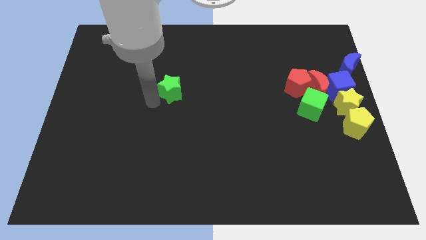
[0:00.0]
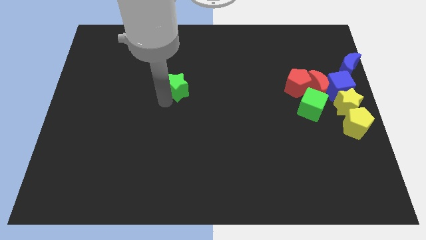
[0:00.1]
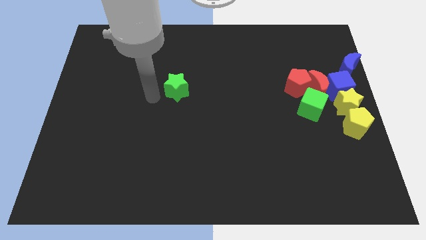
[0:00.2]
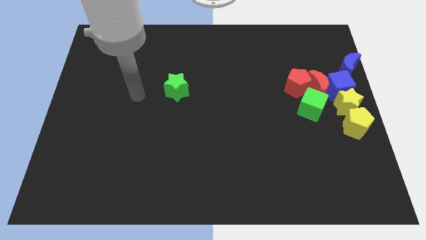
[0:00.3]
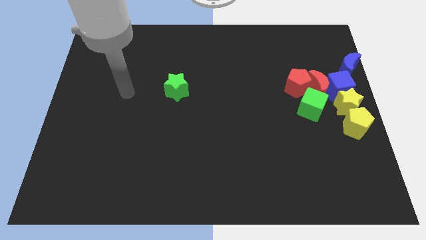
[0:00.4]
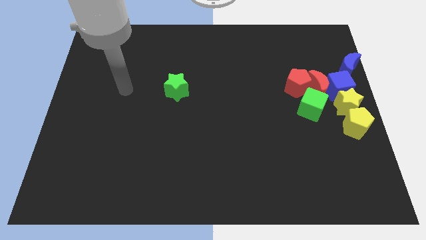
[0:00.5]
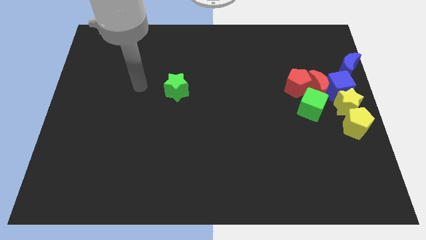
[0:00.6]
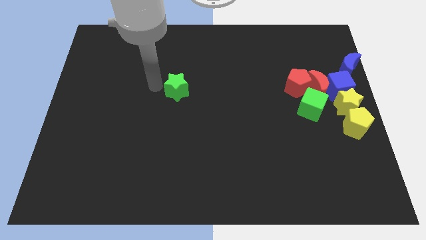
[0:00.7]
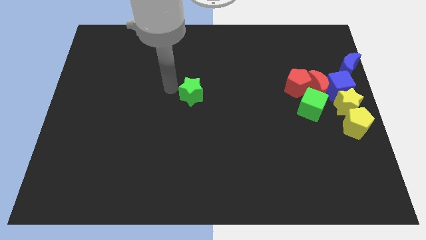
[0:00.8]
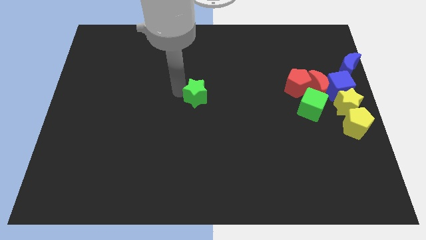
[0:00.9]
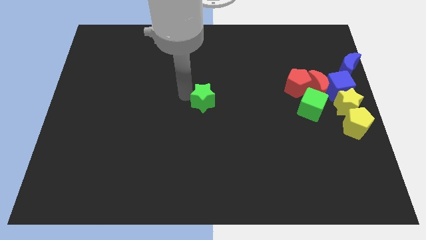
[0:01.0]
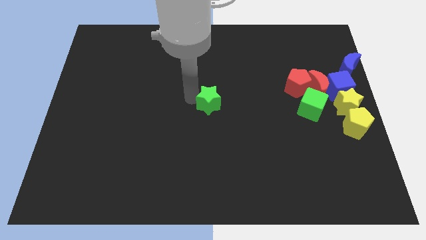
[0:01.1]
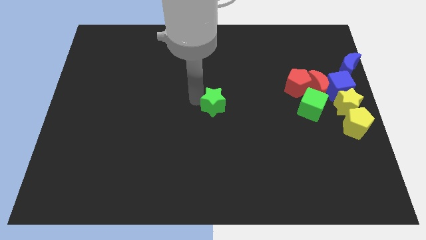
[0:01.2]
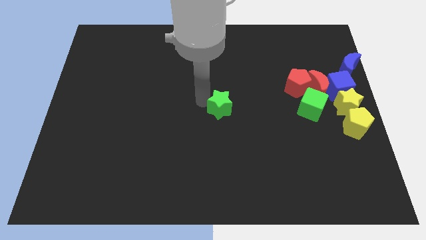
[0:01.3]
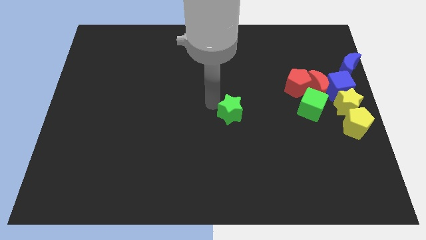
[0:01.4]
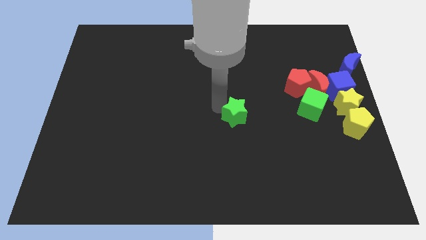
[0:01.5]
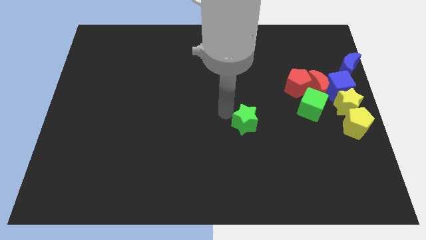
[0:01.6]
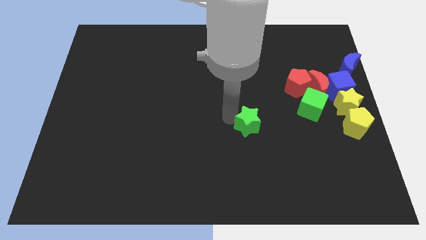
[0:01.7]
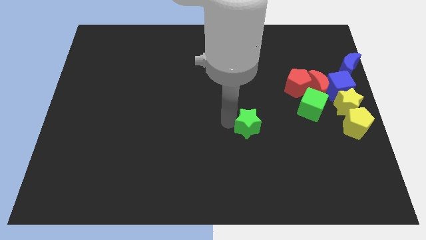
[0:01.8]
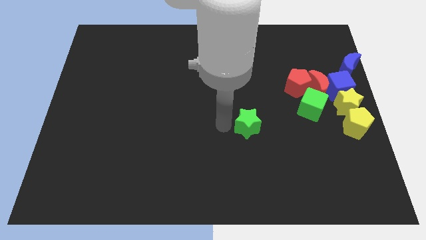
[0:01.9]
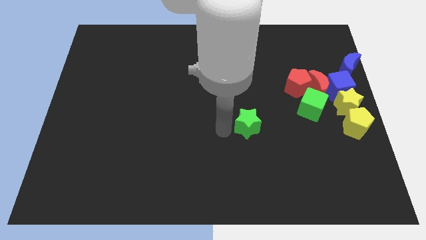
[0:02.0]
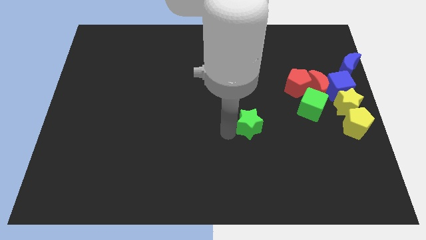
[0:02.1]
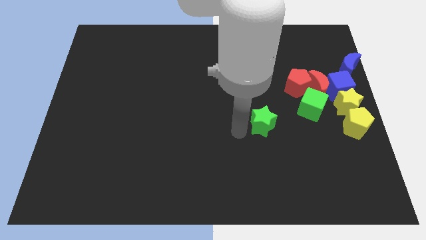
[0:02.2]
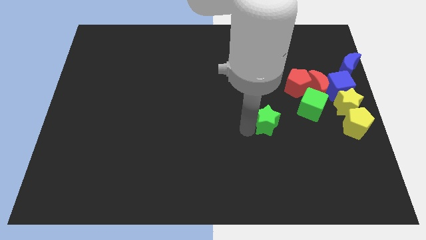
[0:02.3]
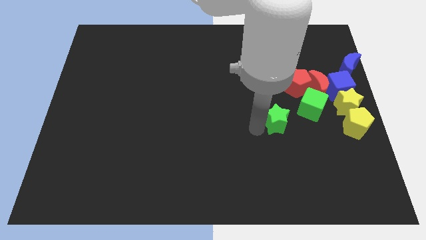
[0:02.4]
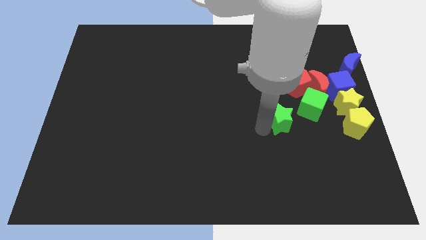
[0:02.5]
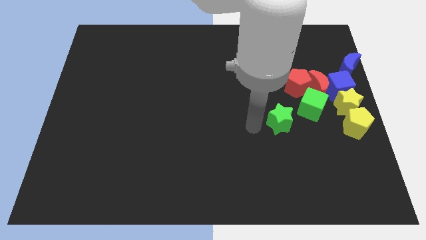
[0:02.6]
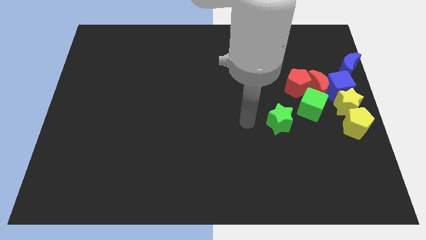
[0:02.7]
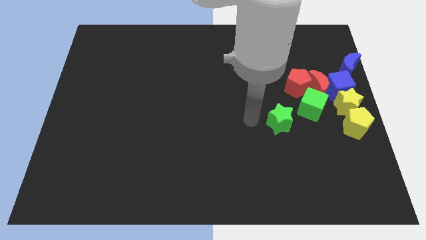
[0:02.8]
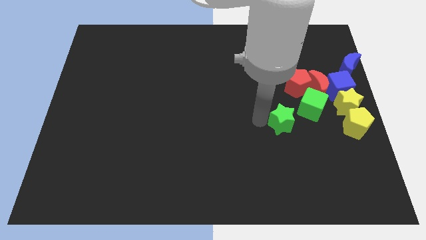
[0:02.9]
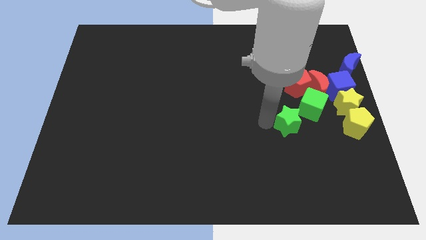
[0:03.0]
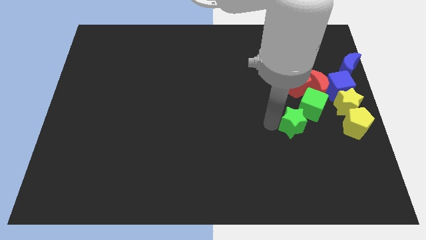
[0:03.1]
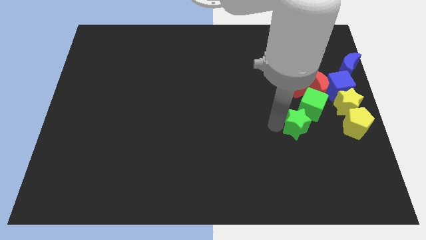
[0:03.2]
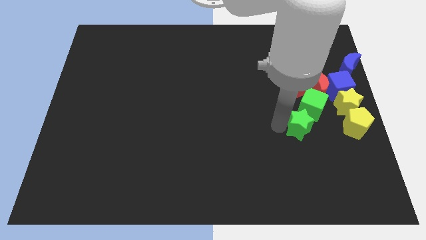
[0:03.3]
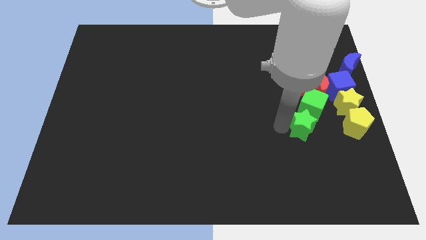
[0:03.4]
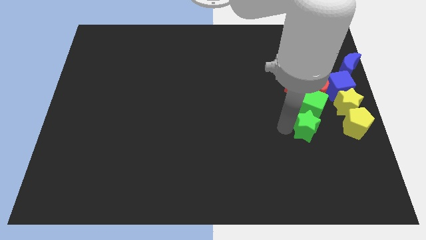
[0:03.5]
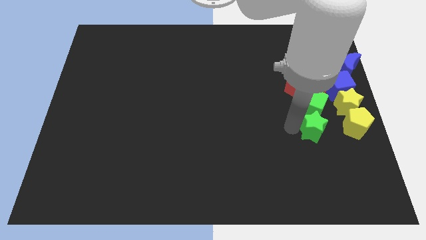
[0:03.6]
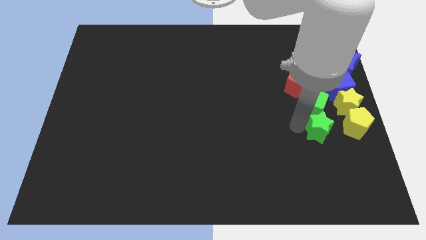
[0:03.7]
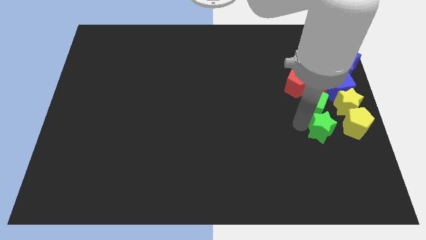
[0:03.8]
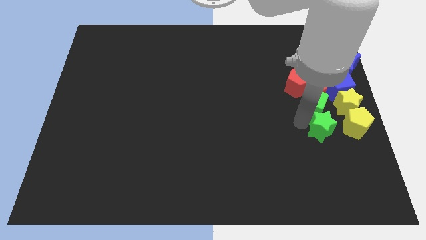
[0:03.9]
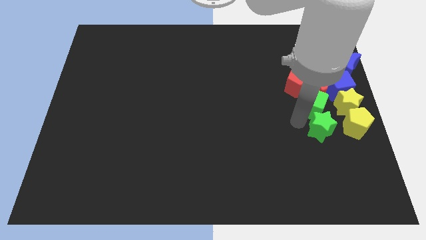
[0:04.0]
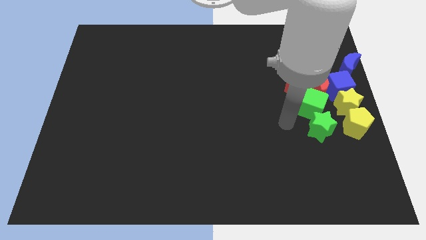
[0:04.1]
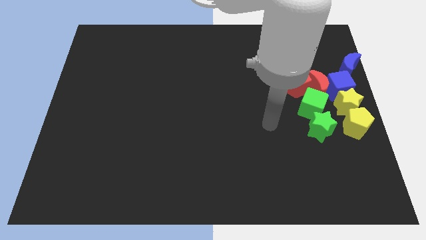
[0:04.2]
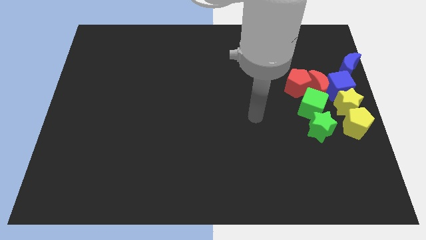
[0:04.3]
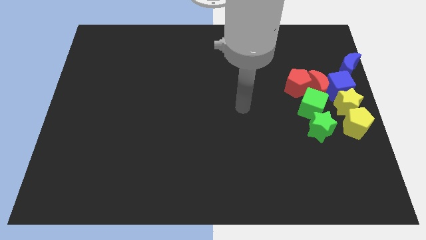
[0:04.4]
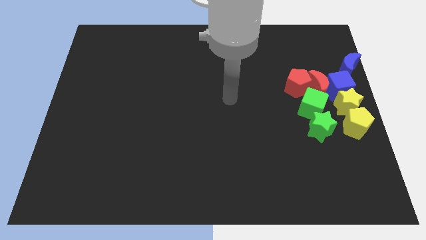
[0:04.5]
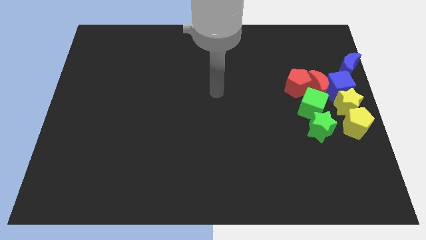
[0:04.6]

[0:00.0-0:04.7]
place the green star below the green cube

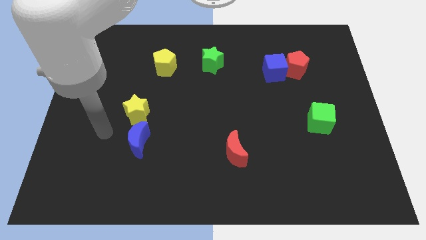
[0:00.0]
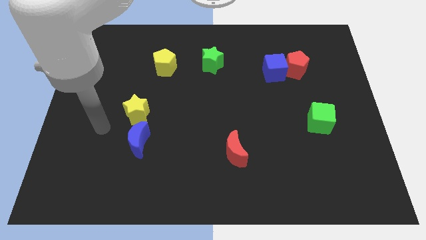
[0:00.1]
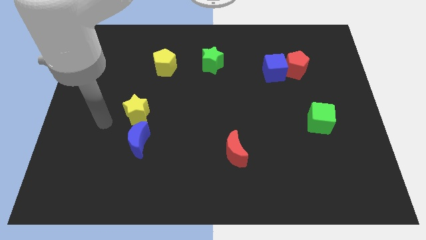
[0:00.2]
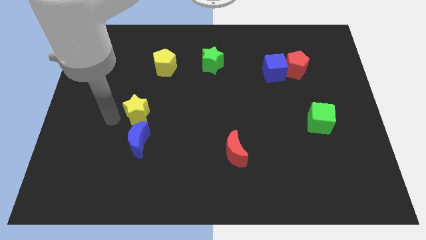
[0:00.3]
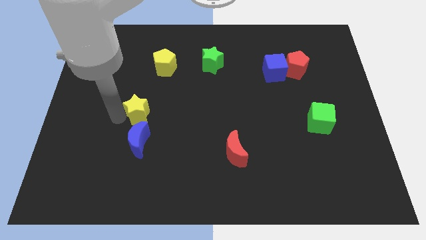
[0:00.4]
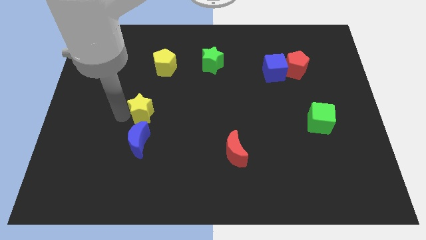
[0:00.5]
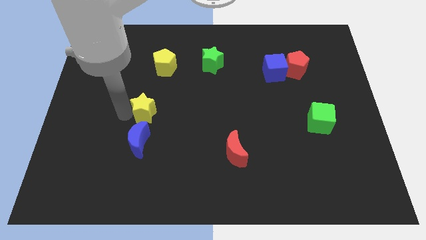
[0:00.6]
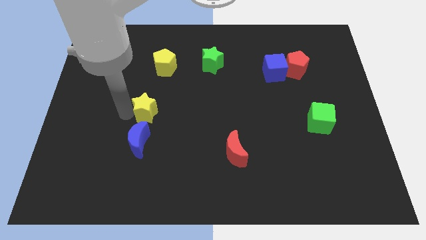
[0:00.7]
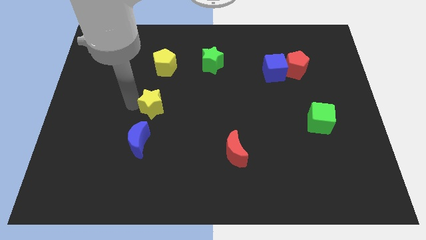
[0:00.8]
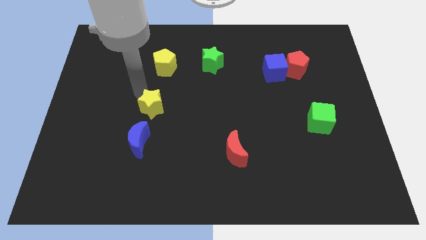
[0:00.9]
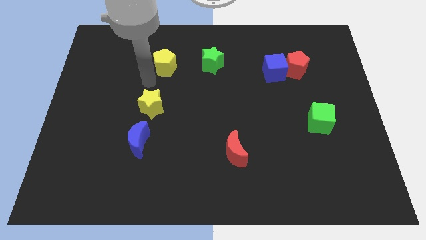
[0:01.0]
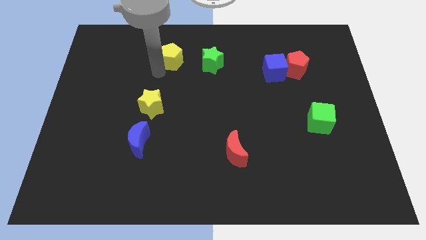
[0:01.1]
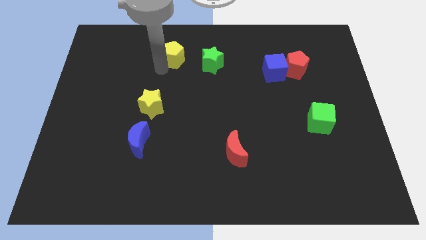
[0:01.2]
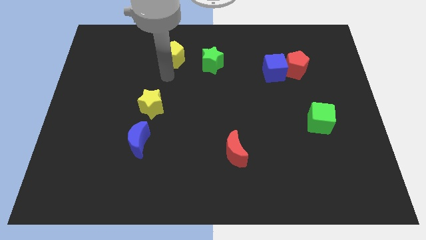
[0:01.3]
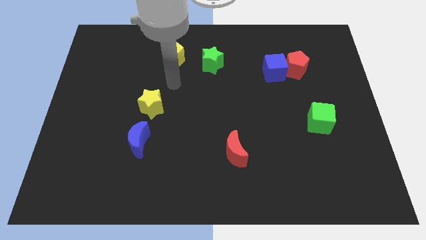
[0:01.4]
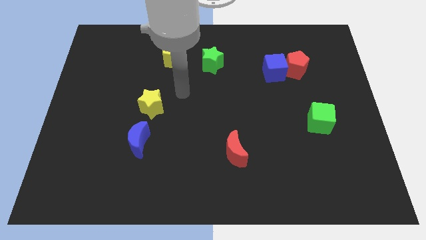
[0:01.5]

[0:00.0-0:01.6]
slightly push the yellow star to the center of board

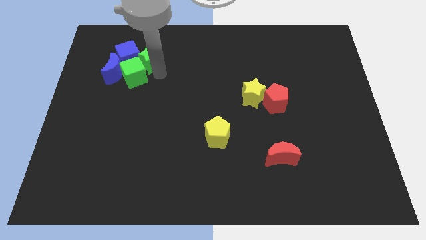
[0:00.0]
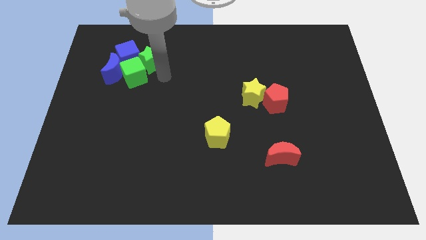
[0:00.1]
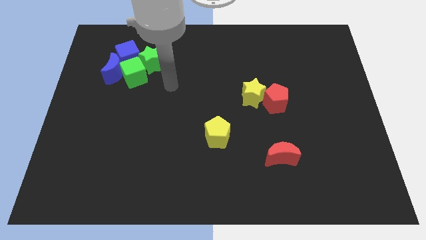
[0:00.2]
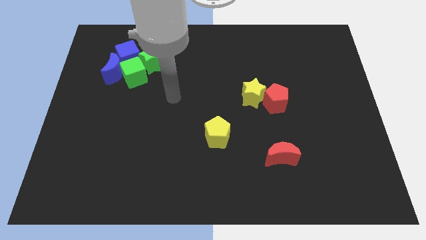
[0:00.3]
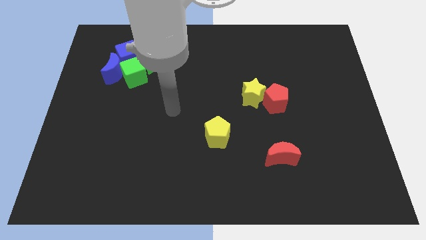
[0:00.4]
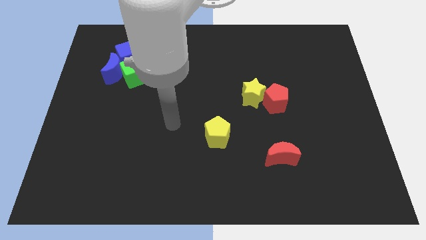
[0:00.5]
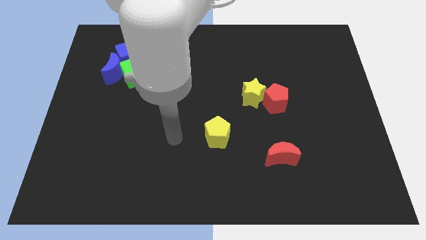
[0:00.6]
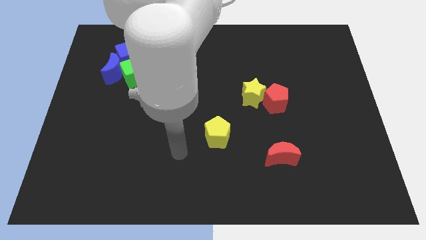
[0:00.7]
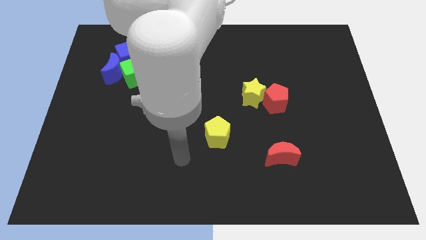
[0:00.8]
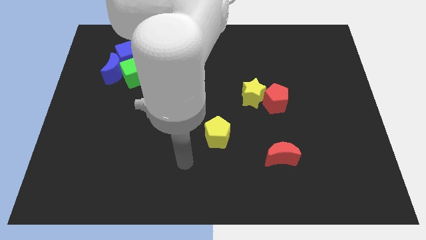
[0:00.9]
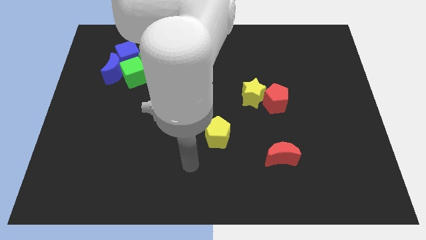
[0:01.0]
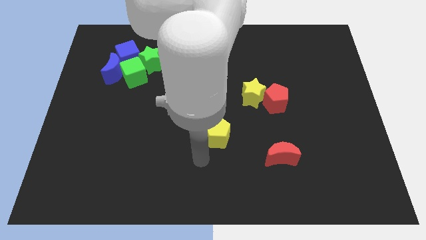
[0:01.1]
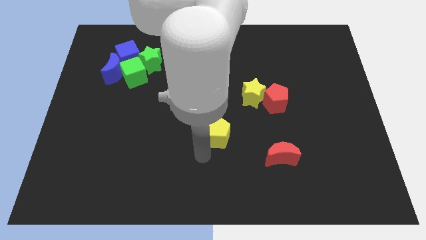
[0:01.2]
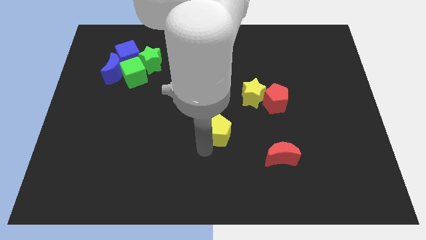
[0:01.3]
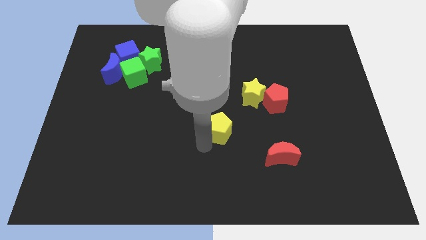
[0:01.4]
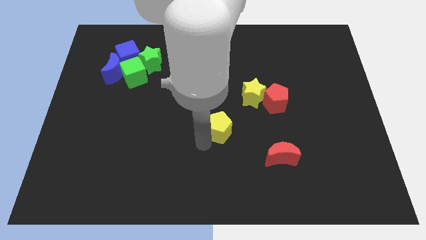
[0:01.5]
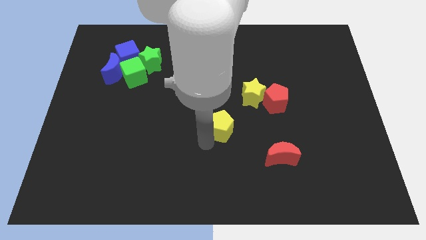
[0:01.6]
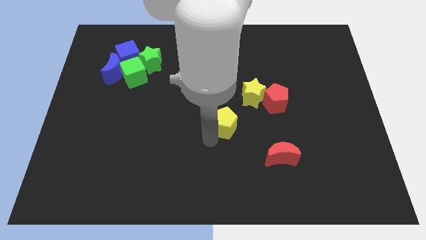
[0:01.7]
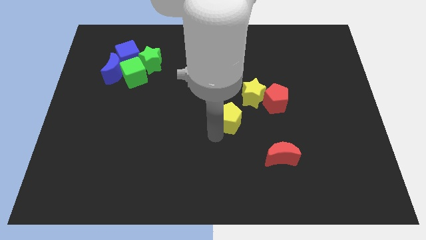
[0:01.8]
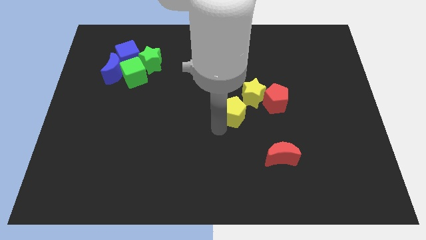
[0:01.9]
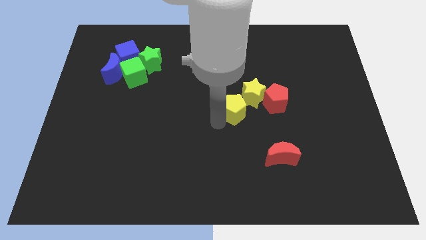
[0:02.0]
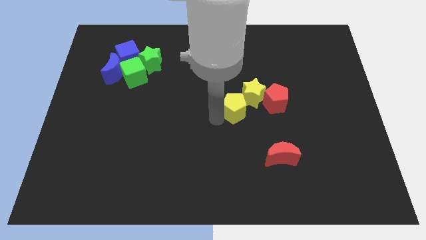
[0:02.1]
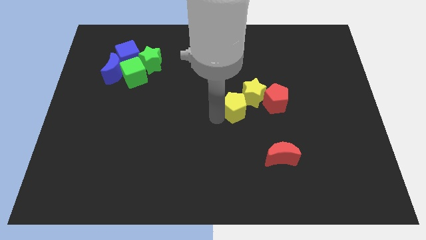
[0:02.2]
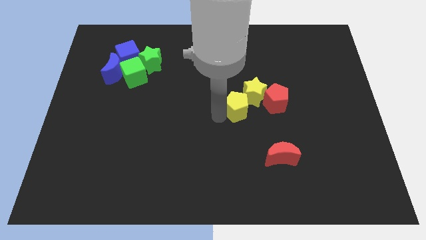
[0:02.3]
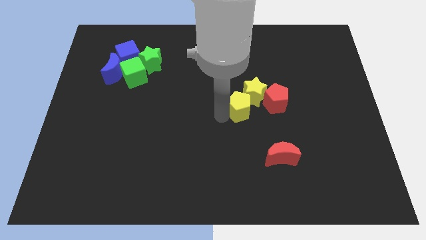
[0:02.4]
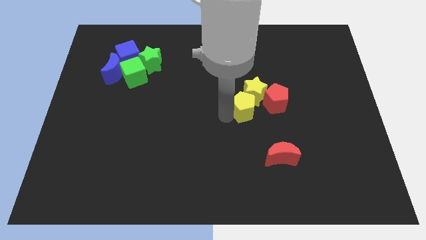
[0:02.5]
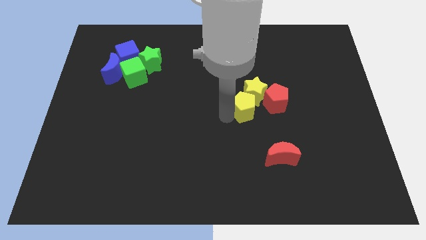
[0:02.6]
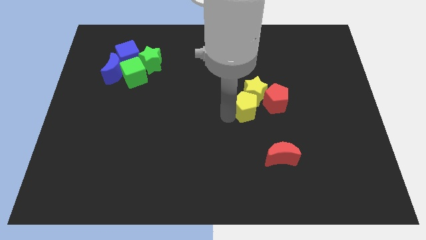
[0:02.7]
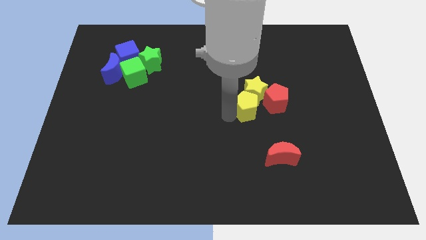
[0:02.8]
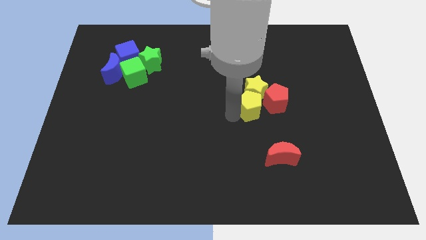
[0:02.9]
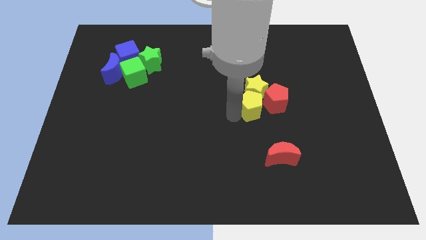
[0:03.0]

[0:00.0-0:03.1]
place yellow pentagon below the yellow star
